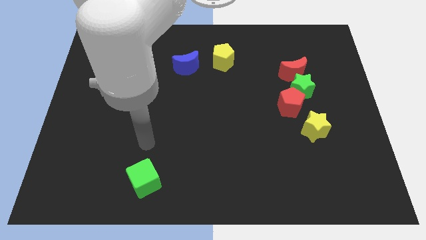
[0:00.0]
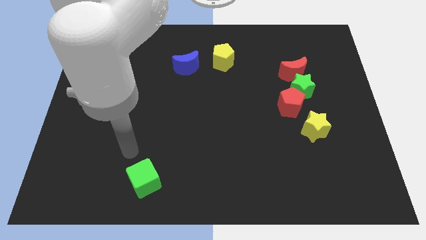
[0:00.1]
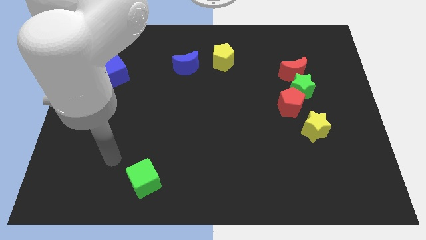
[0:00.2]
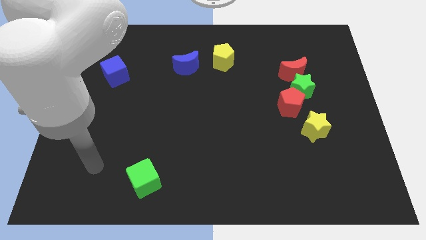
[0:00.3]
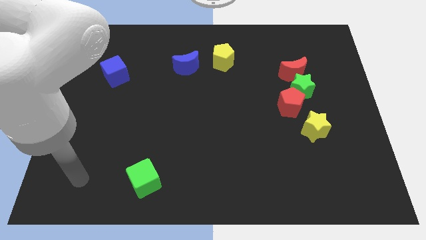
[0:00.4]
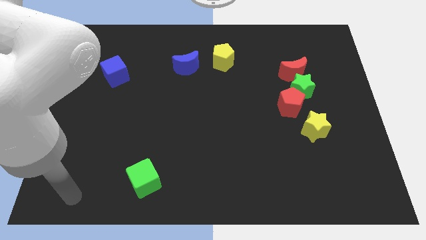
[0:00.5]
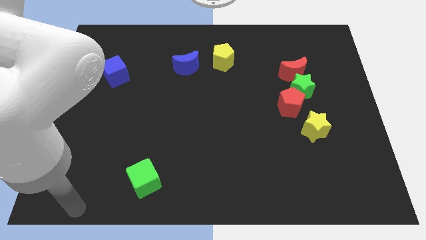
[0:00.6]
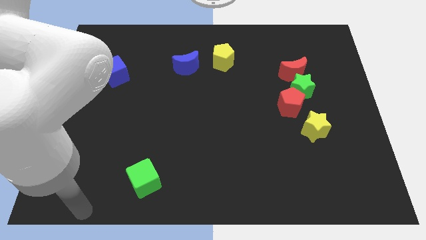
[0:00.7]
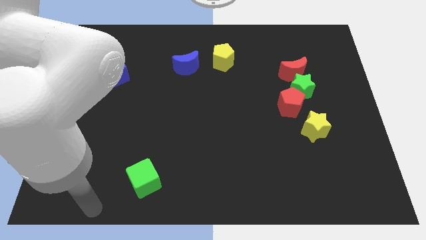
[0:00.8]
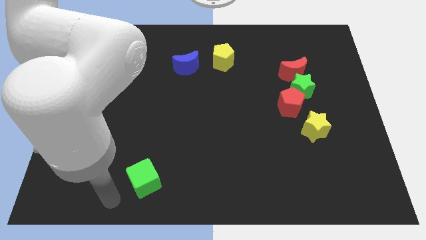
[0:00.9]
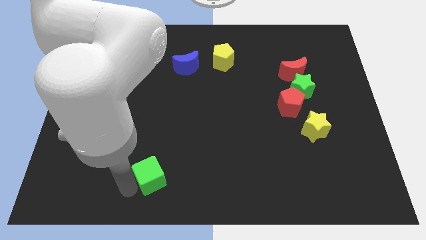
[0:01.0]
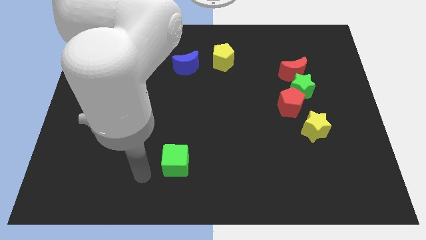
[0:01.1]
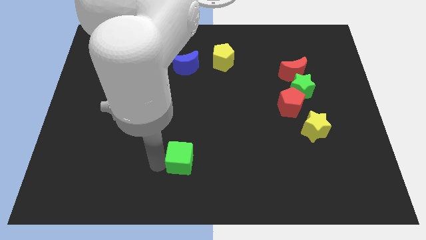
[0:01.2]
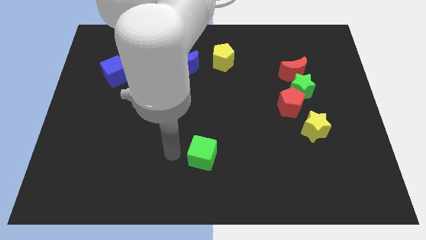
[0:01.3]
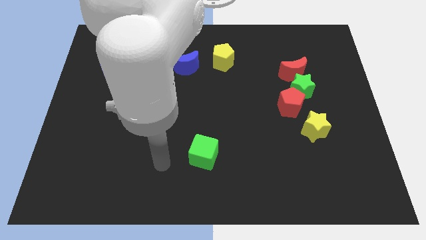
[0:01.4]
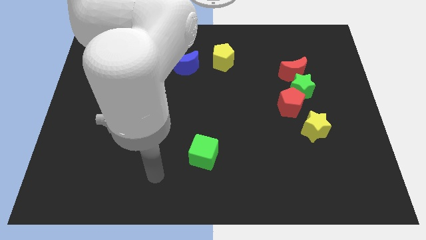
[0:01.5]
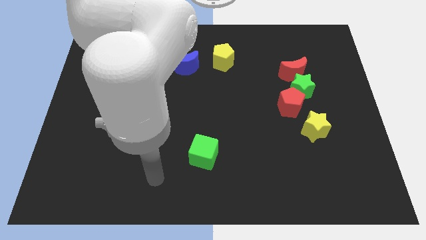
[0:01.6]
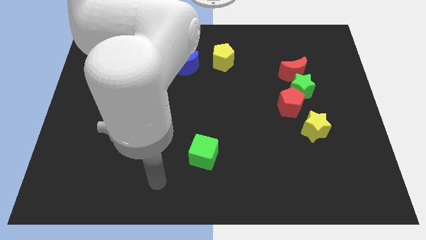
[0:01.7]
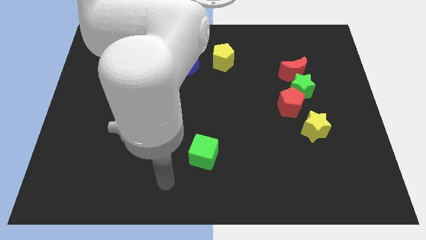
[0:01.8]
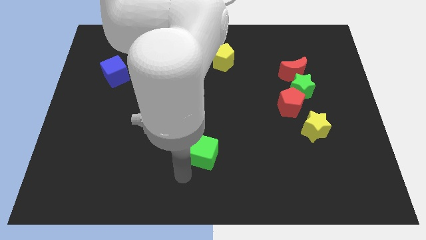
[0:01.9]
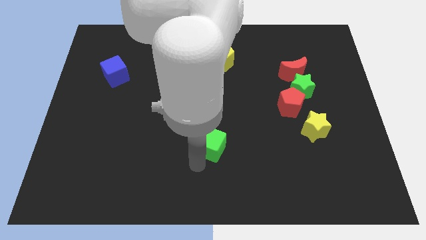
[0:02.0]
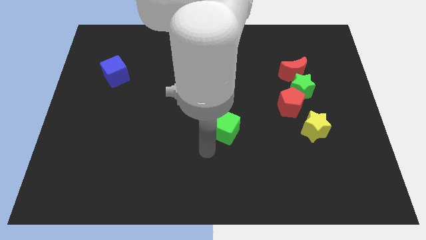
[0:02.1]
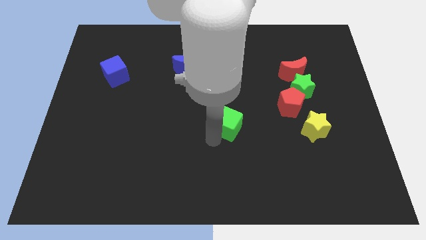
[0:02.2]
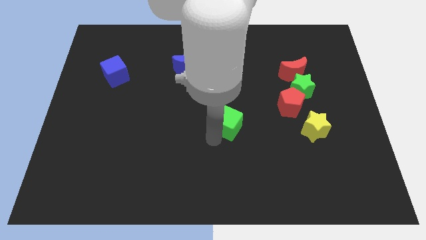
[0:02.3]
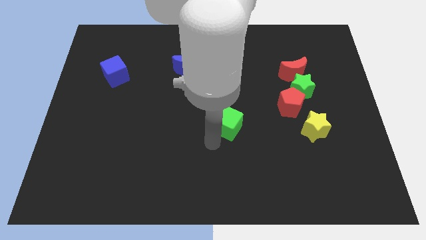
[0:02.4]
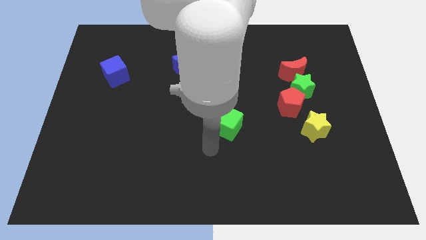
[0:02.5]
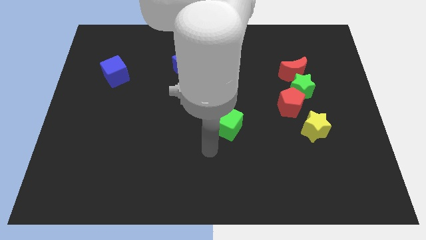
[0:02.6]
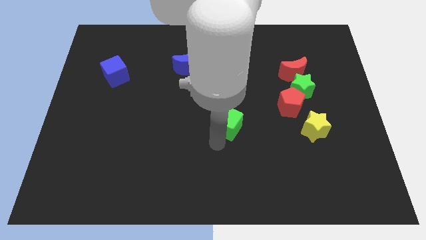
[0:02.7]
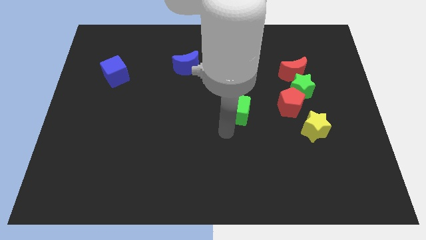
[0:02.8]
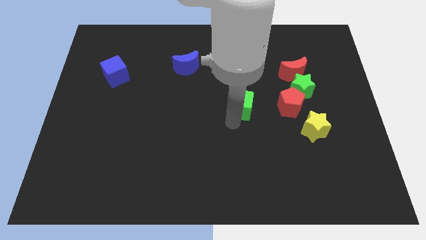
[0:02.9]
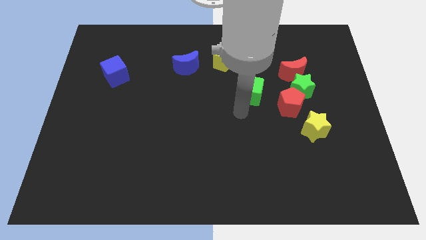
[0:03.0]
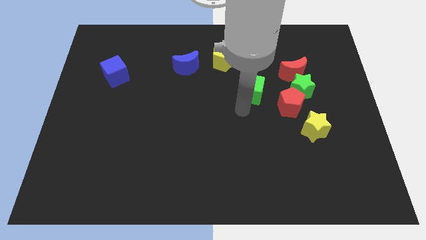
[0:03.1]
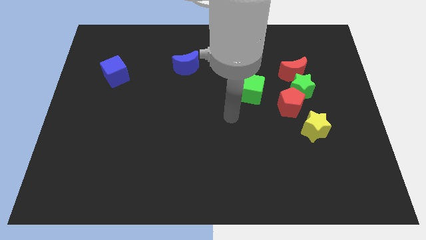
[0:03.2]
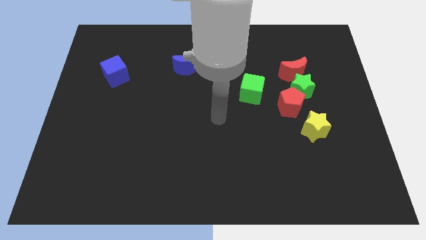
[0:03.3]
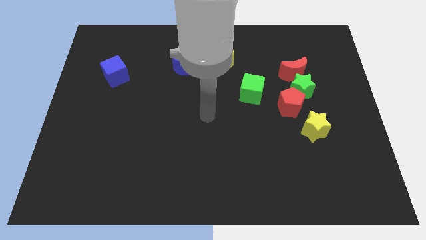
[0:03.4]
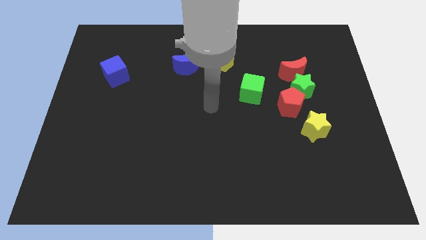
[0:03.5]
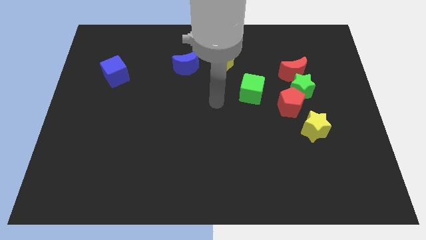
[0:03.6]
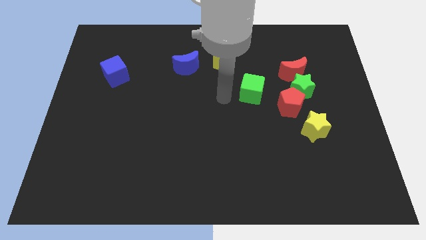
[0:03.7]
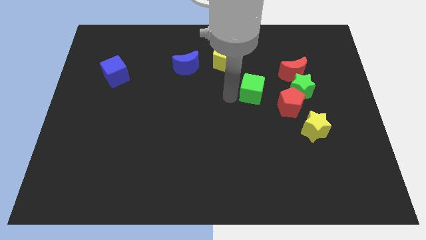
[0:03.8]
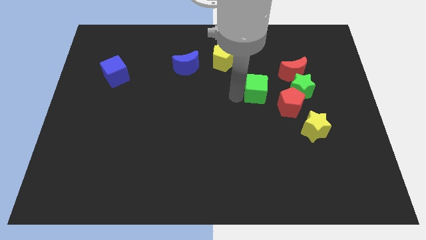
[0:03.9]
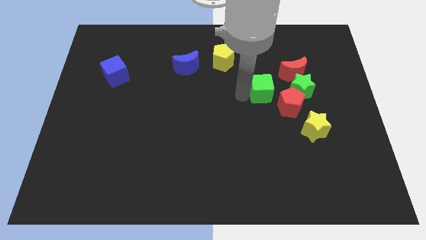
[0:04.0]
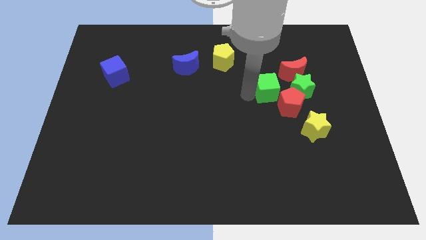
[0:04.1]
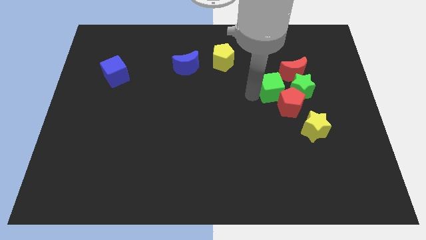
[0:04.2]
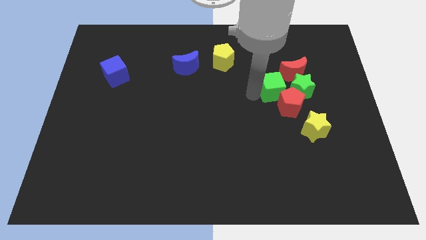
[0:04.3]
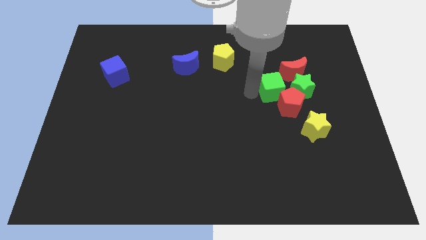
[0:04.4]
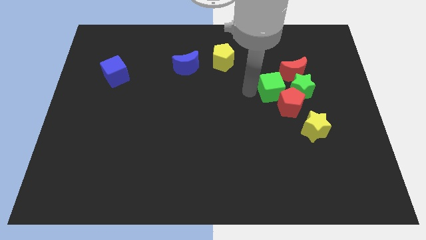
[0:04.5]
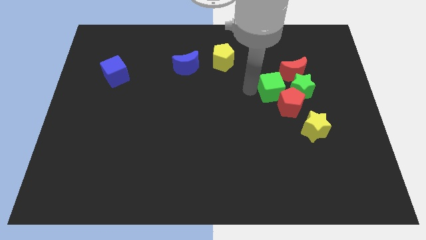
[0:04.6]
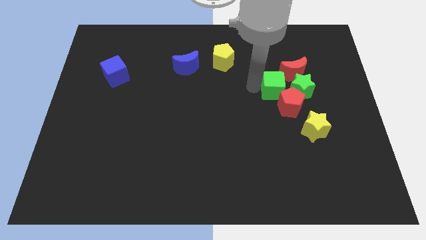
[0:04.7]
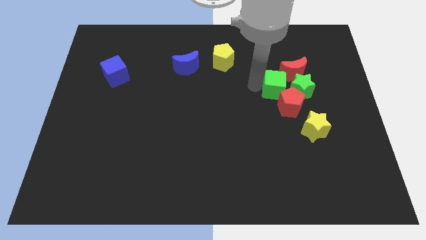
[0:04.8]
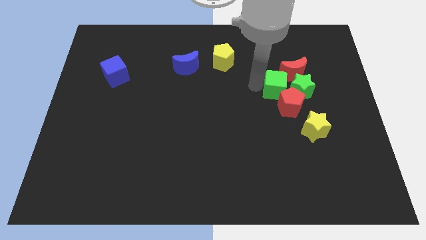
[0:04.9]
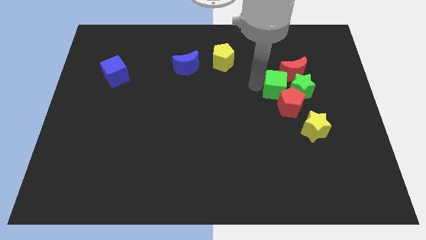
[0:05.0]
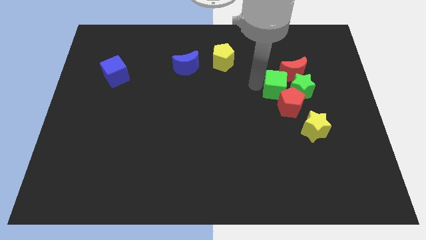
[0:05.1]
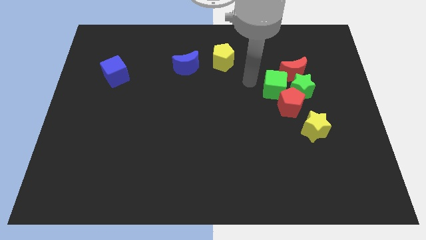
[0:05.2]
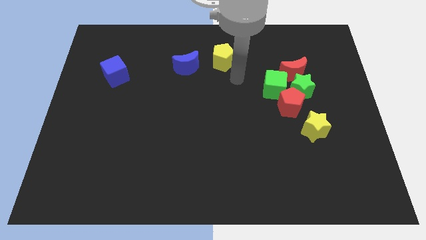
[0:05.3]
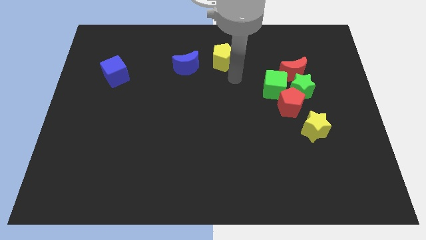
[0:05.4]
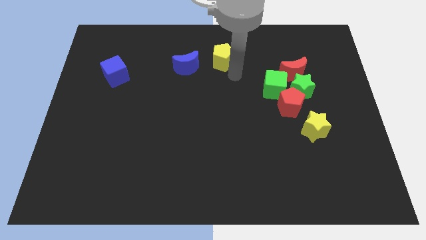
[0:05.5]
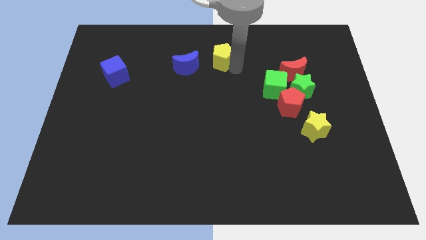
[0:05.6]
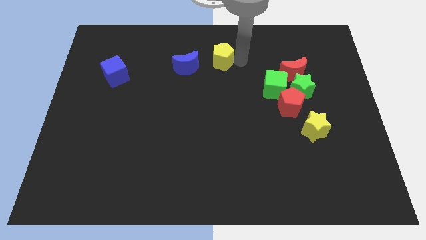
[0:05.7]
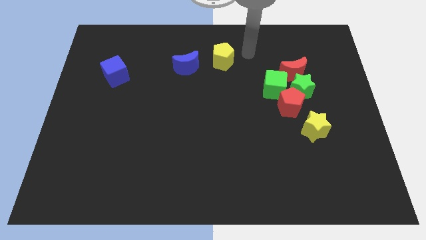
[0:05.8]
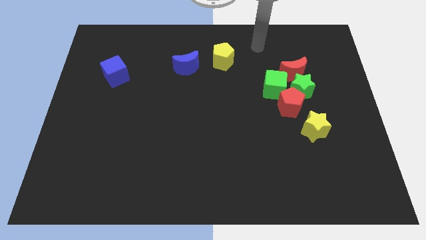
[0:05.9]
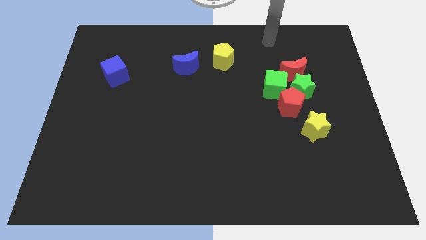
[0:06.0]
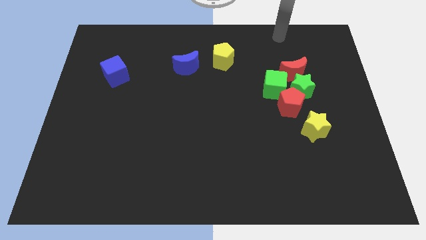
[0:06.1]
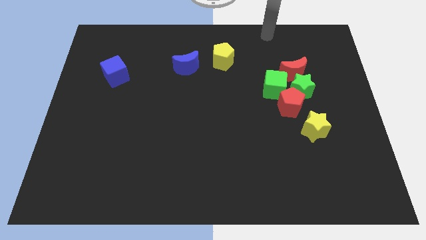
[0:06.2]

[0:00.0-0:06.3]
push the green cube to the left of the green star

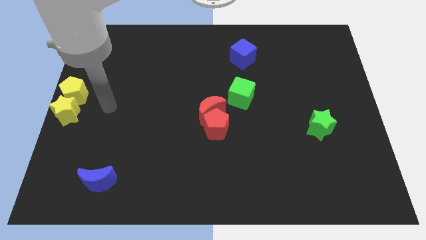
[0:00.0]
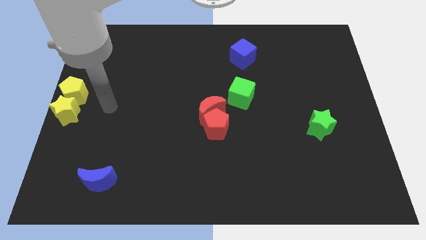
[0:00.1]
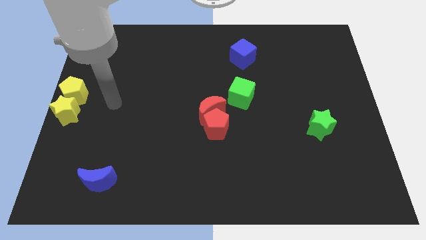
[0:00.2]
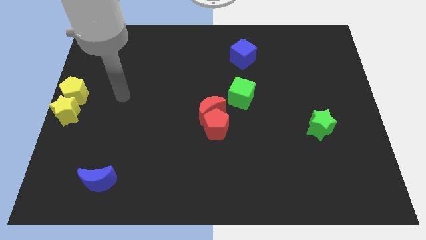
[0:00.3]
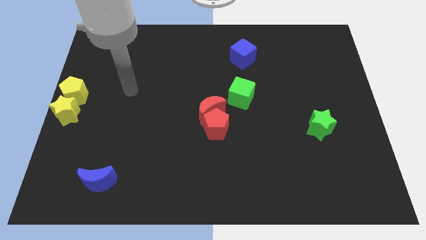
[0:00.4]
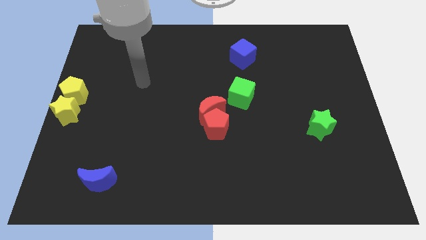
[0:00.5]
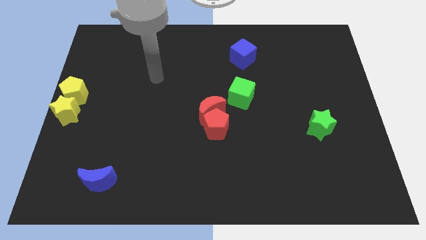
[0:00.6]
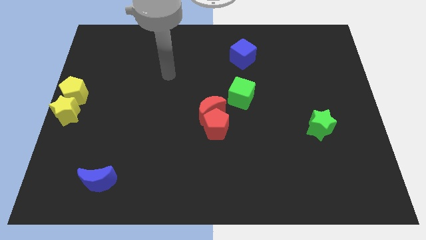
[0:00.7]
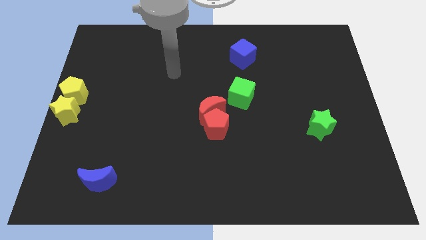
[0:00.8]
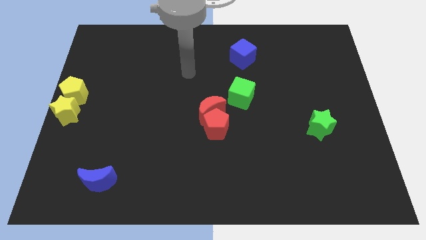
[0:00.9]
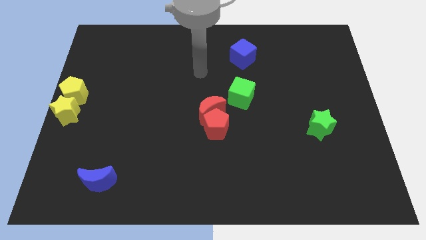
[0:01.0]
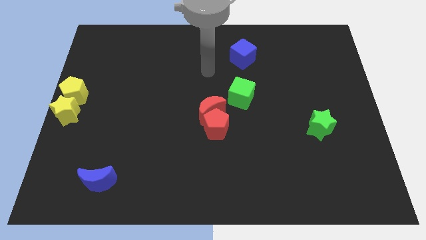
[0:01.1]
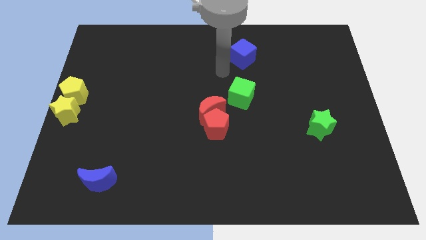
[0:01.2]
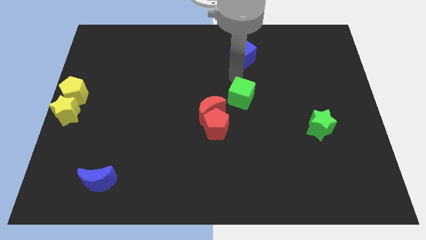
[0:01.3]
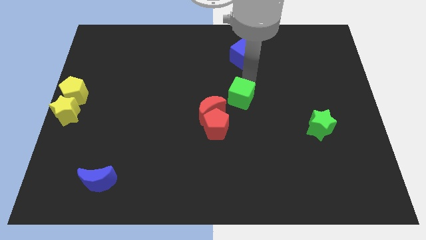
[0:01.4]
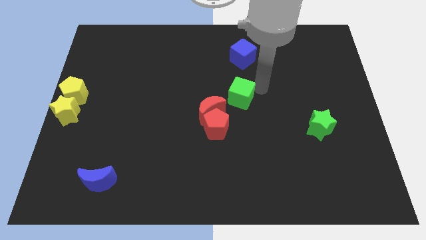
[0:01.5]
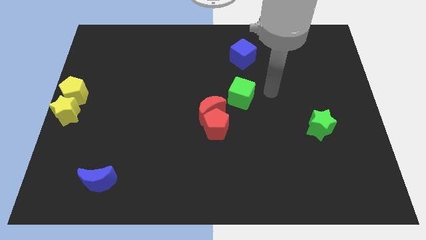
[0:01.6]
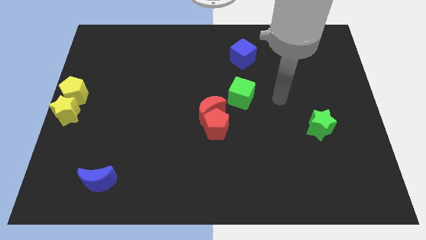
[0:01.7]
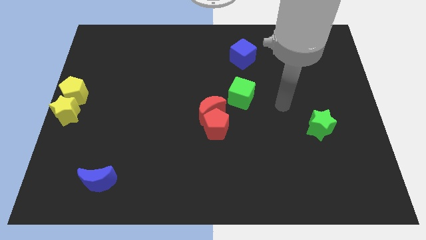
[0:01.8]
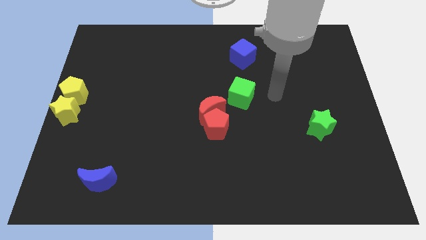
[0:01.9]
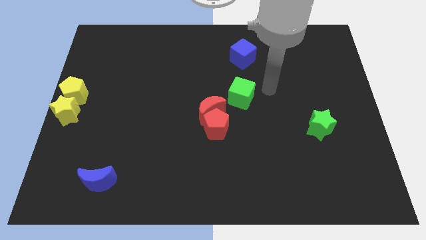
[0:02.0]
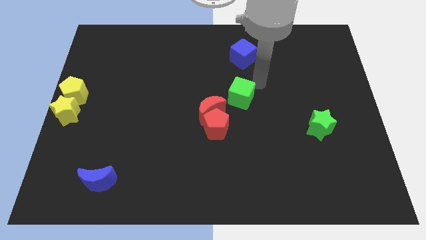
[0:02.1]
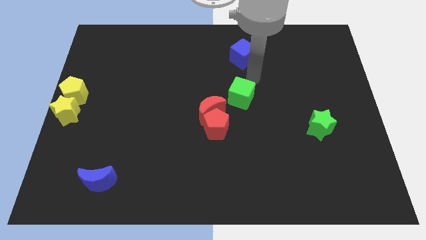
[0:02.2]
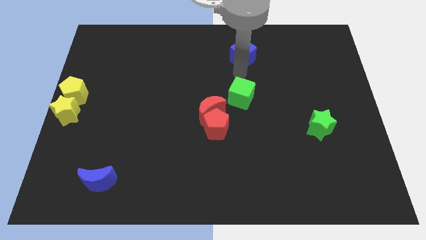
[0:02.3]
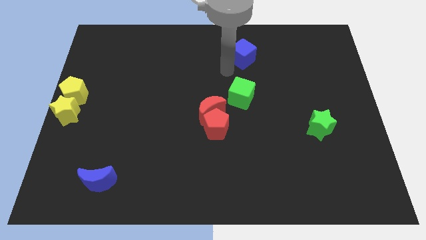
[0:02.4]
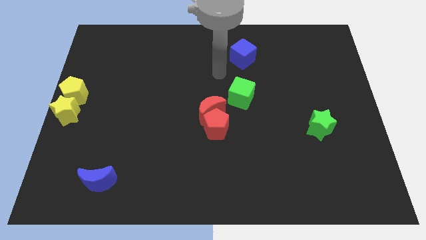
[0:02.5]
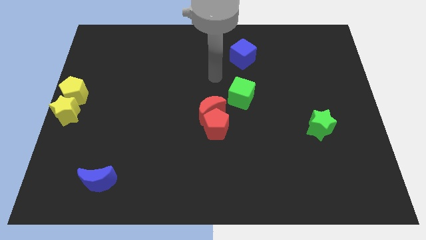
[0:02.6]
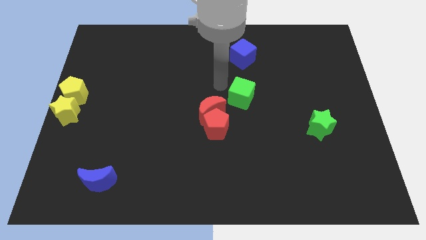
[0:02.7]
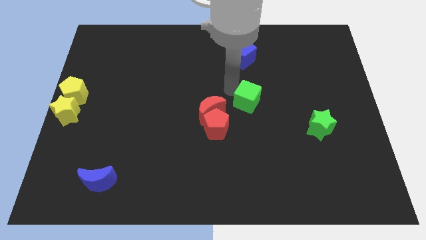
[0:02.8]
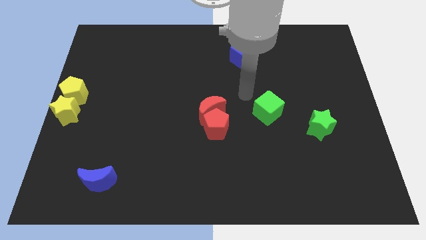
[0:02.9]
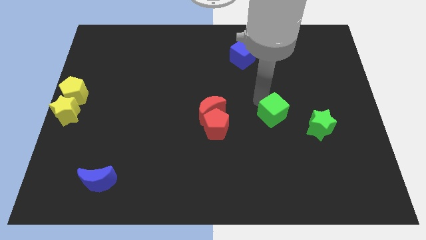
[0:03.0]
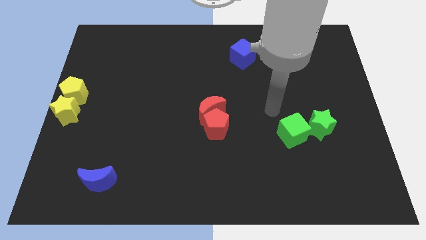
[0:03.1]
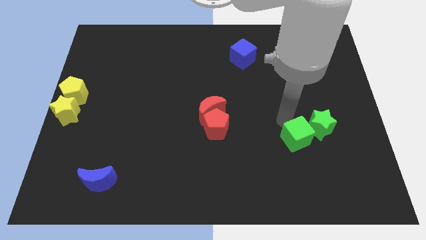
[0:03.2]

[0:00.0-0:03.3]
push the green cube into the green star
